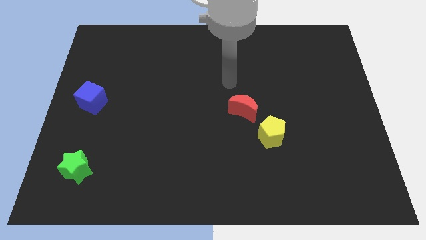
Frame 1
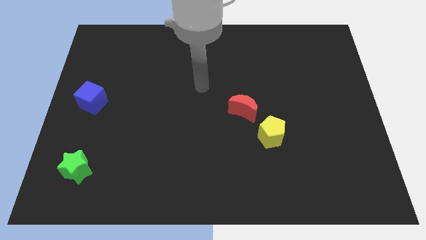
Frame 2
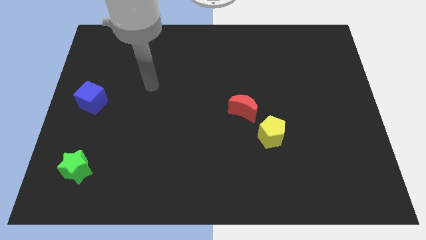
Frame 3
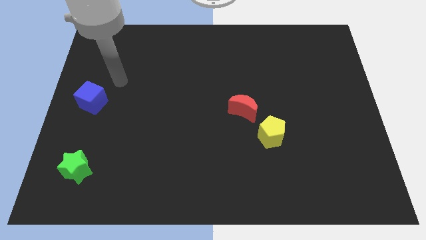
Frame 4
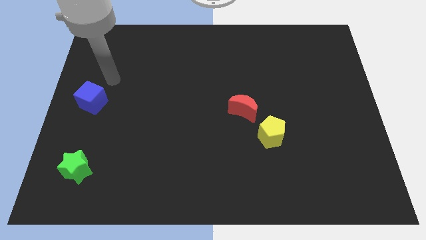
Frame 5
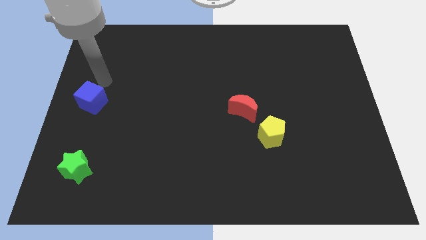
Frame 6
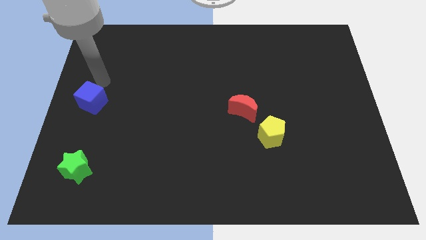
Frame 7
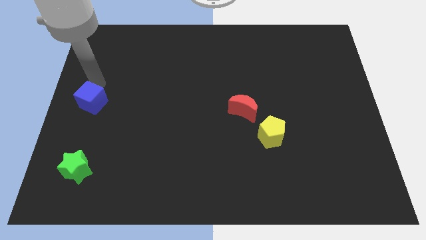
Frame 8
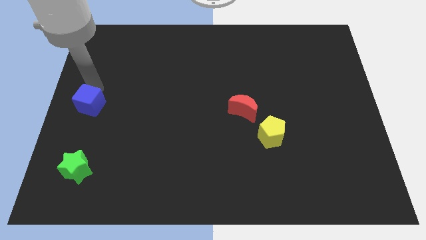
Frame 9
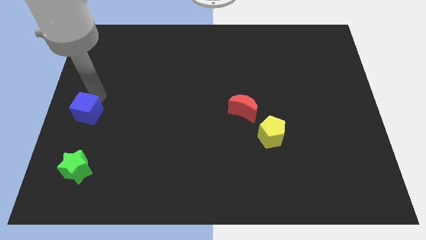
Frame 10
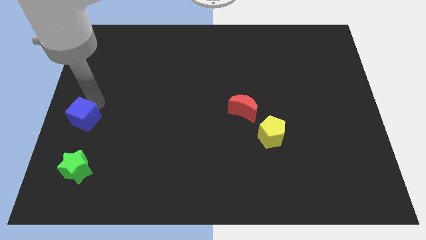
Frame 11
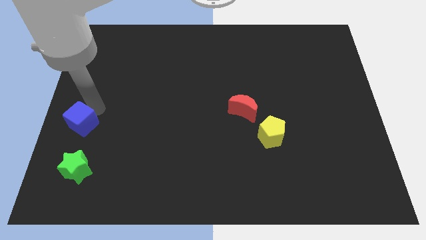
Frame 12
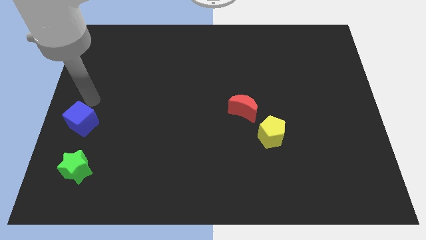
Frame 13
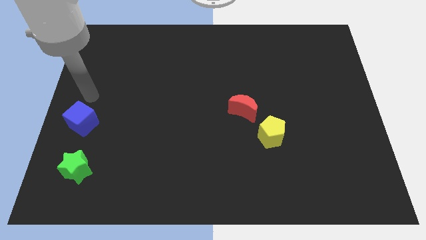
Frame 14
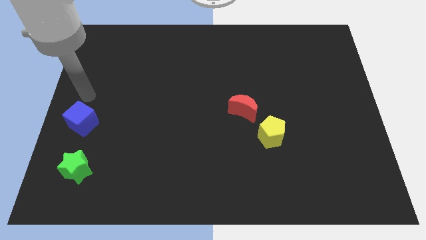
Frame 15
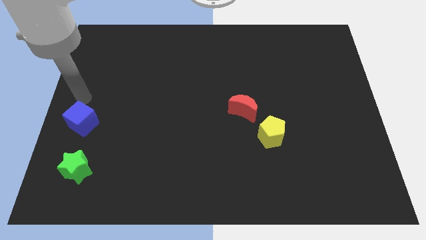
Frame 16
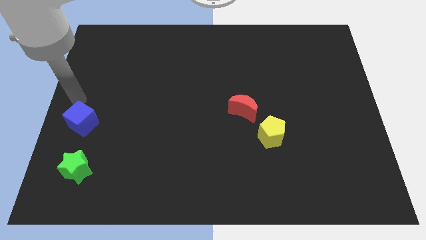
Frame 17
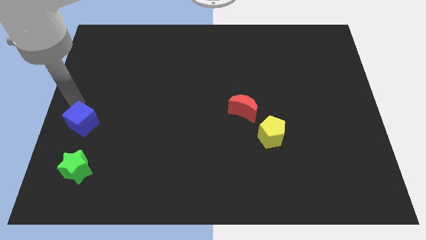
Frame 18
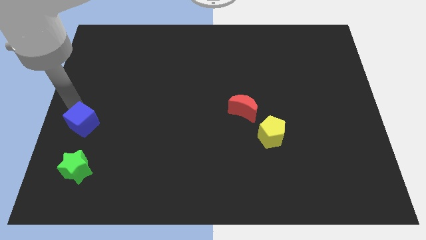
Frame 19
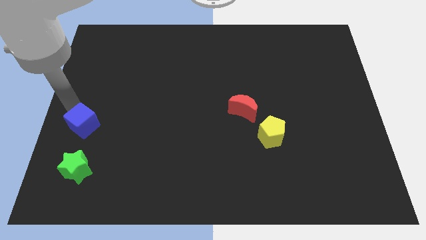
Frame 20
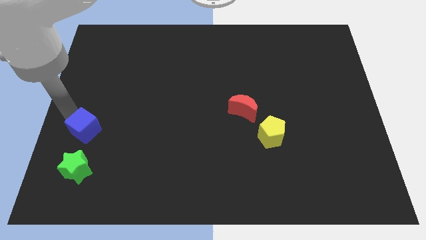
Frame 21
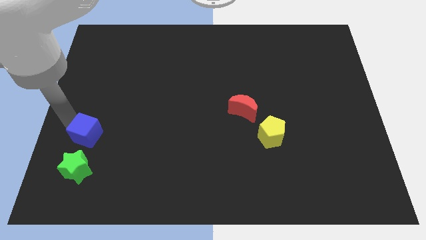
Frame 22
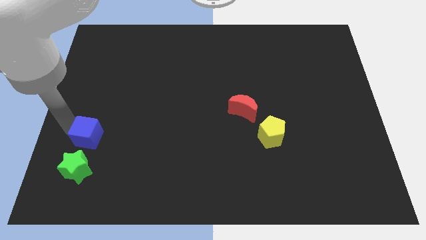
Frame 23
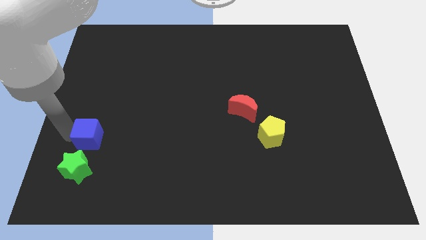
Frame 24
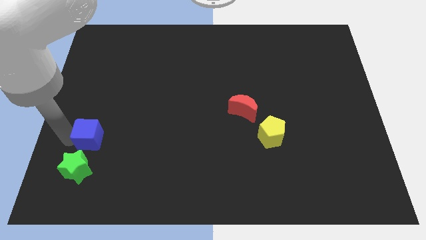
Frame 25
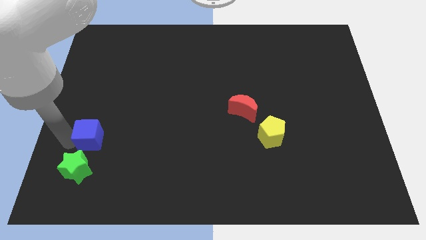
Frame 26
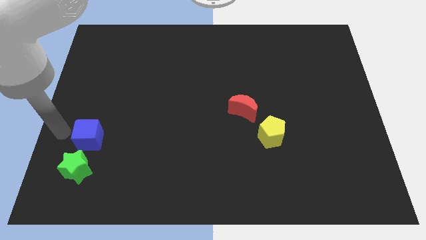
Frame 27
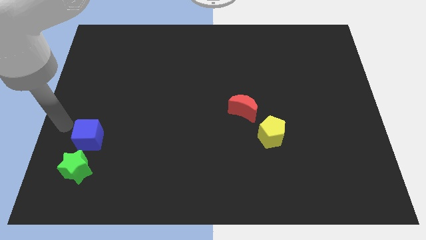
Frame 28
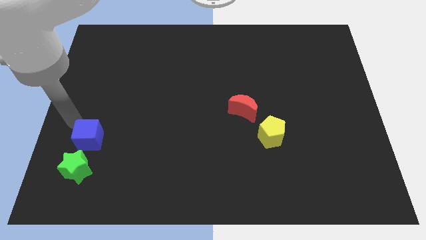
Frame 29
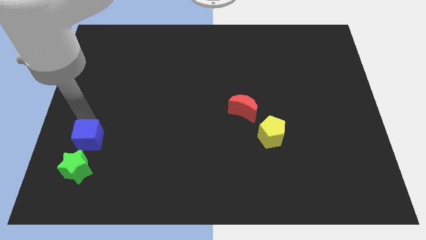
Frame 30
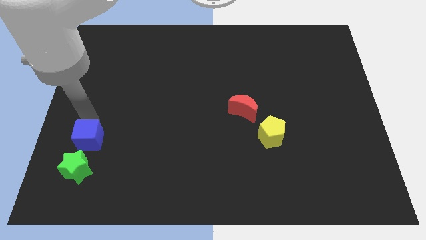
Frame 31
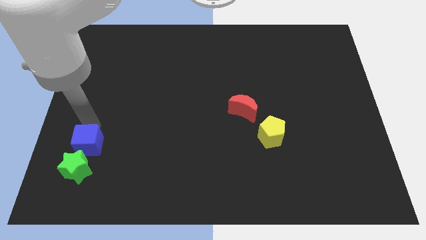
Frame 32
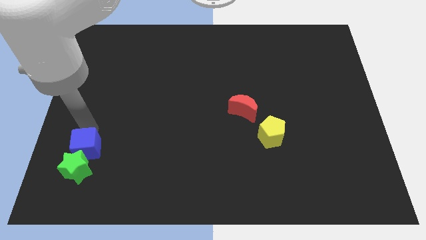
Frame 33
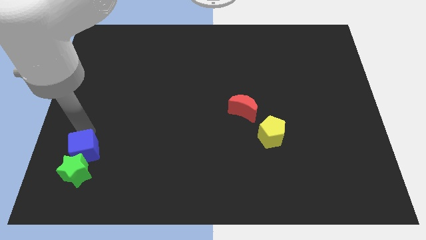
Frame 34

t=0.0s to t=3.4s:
put the blue cube close to the green star

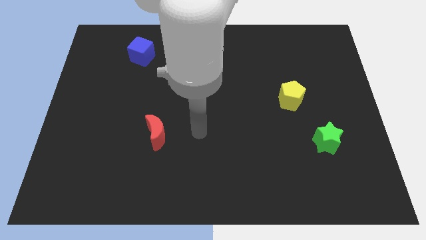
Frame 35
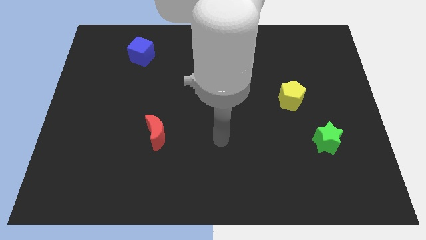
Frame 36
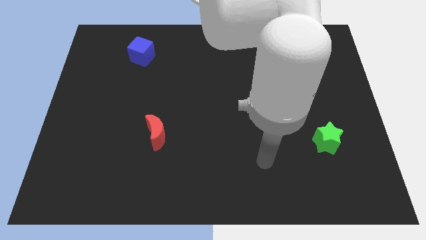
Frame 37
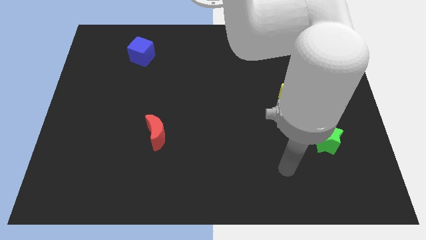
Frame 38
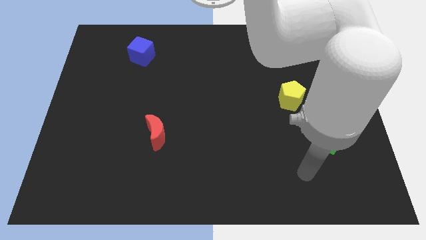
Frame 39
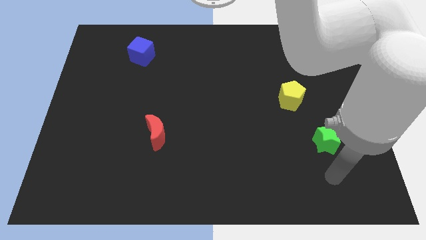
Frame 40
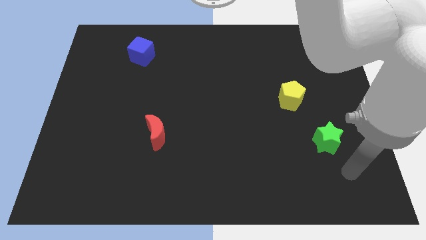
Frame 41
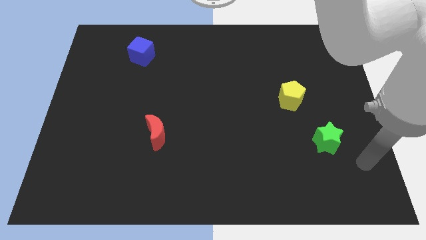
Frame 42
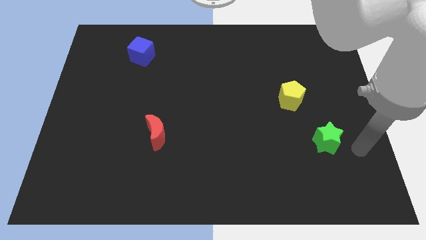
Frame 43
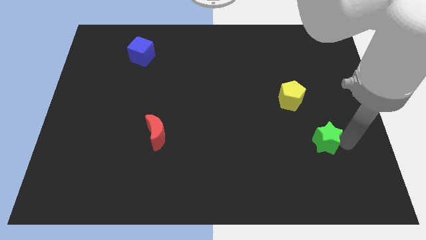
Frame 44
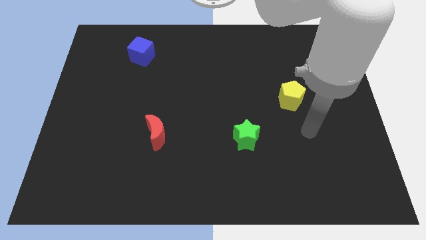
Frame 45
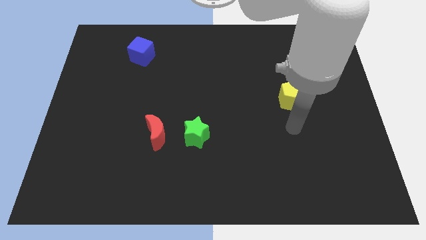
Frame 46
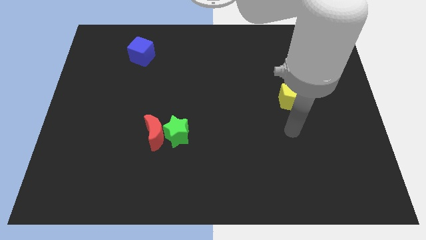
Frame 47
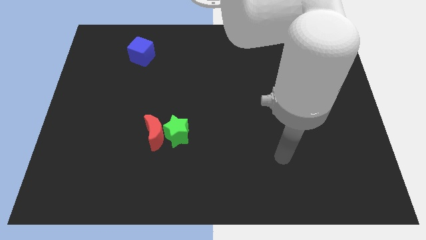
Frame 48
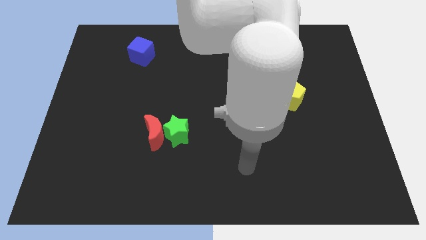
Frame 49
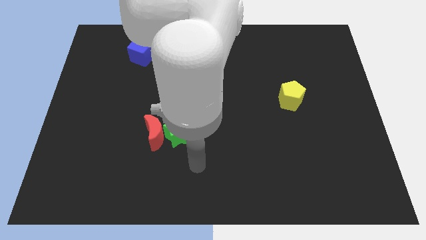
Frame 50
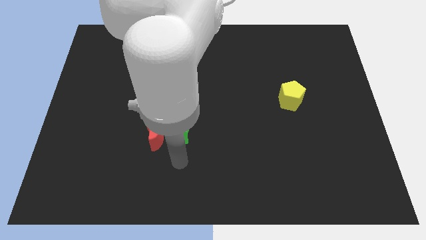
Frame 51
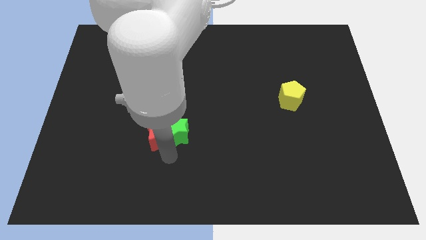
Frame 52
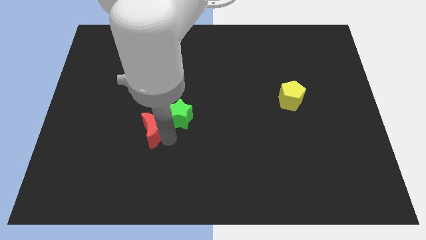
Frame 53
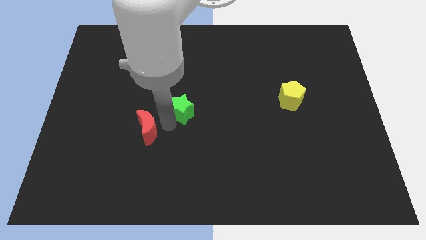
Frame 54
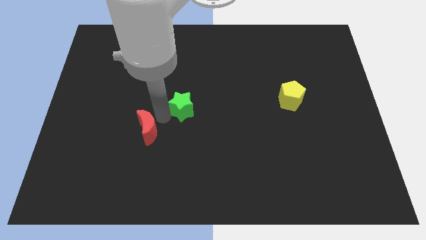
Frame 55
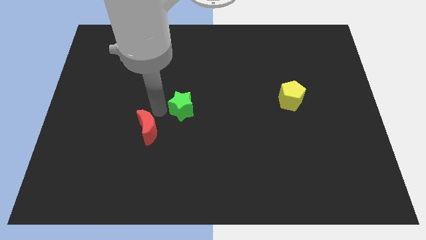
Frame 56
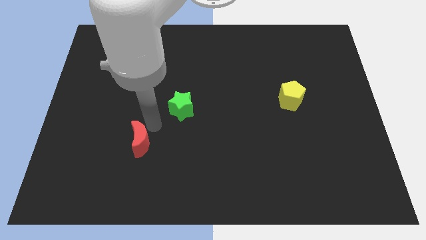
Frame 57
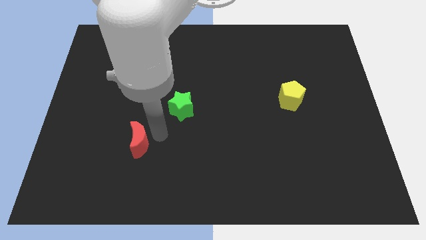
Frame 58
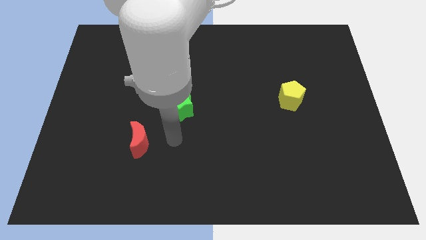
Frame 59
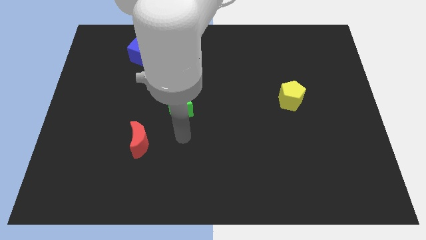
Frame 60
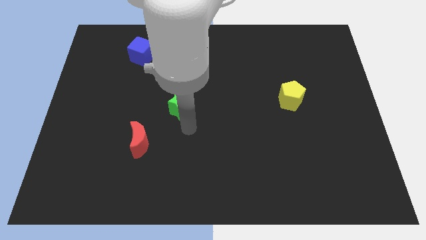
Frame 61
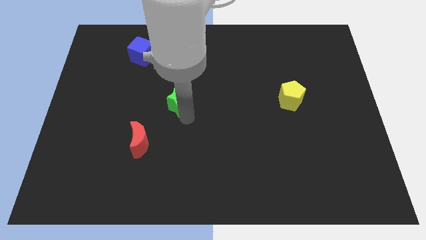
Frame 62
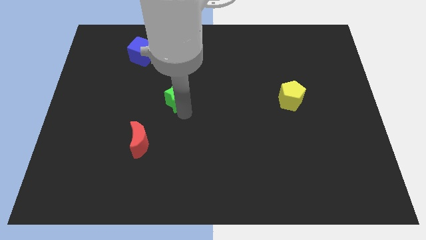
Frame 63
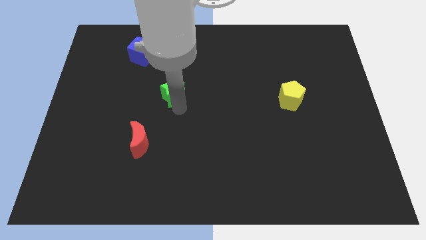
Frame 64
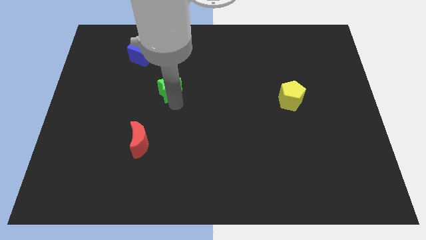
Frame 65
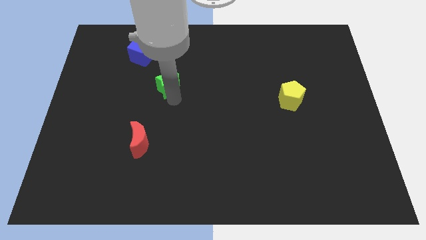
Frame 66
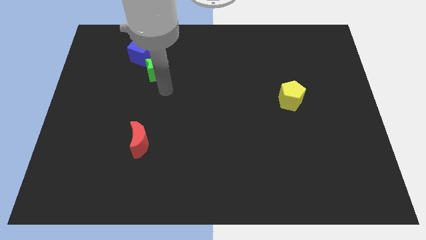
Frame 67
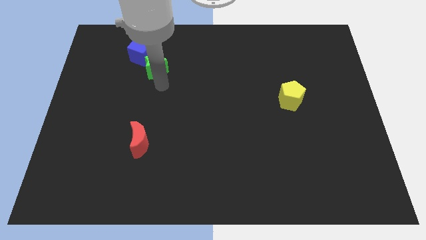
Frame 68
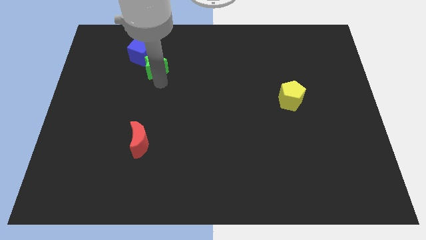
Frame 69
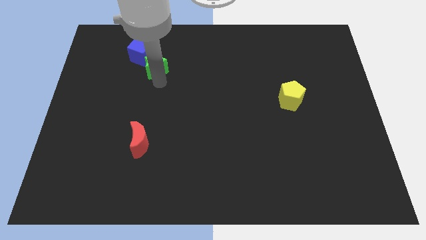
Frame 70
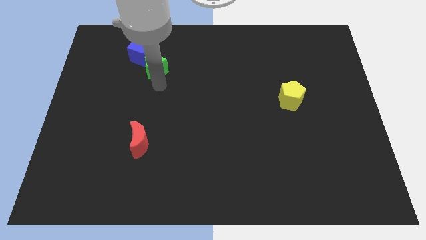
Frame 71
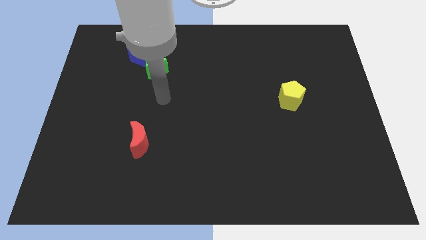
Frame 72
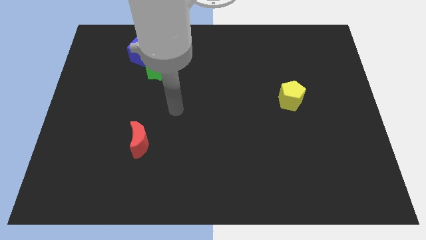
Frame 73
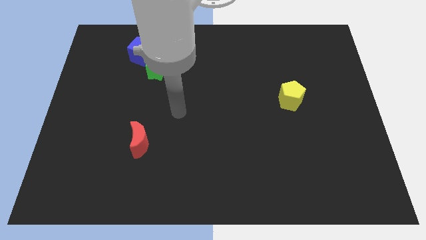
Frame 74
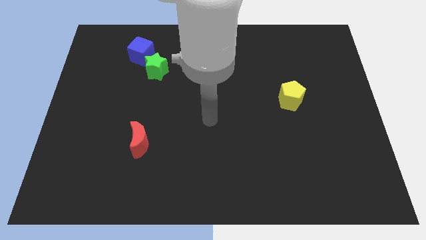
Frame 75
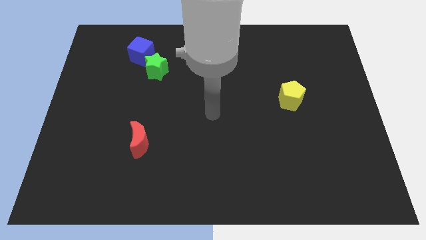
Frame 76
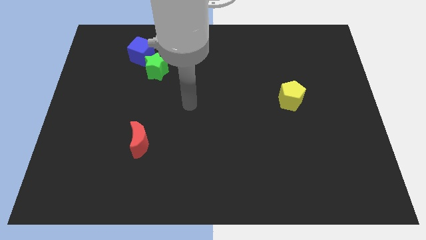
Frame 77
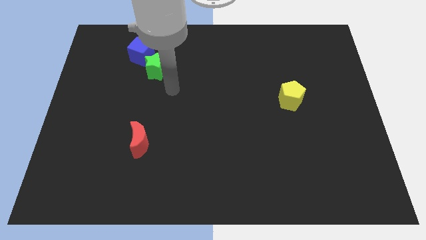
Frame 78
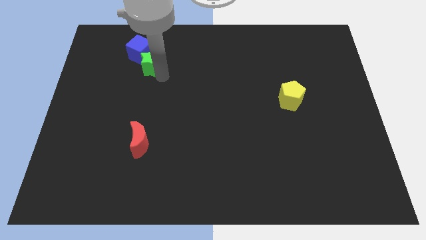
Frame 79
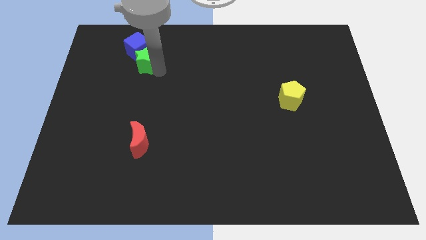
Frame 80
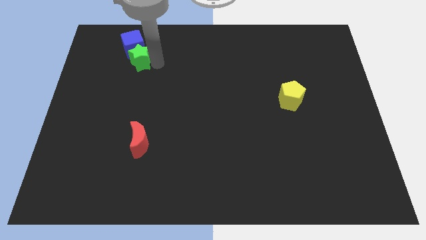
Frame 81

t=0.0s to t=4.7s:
put the green block close to the cube

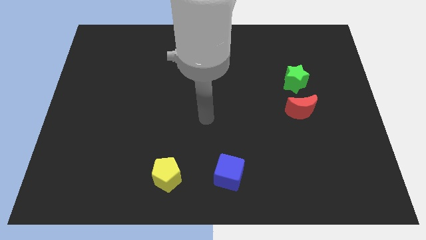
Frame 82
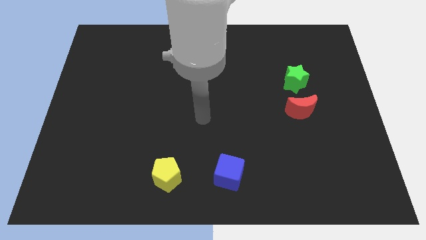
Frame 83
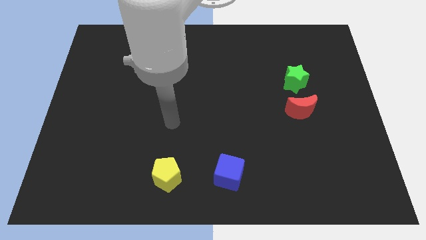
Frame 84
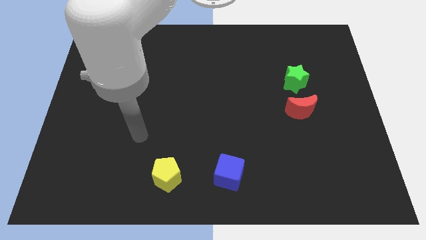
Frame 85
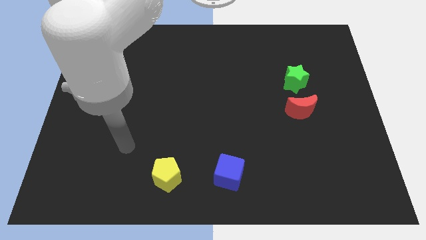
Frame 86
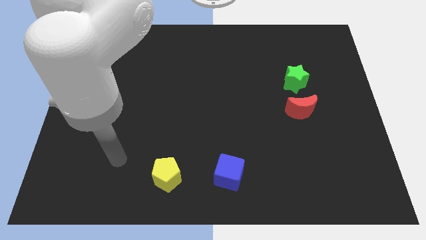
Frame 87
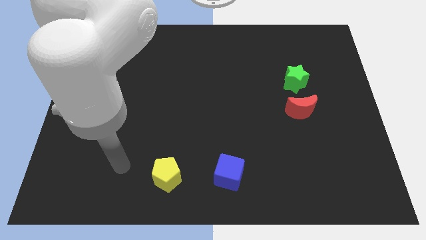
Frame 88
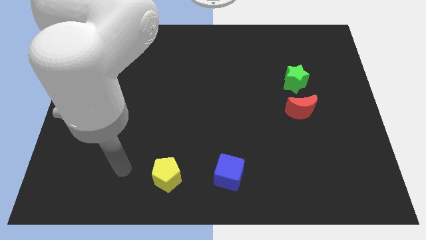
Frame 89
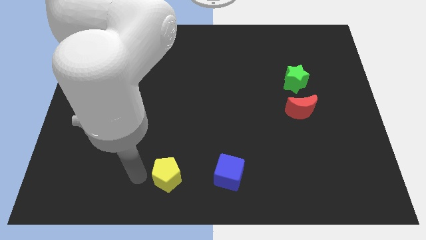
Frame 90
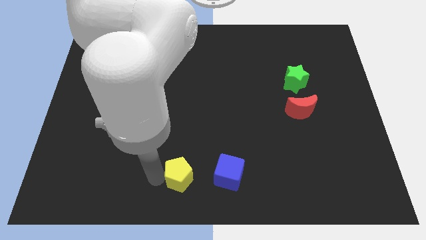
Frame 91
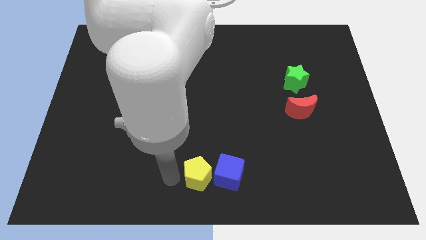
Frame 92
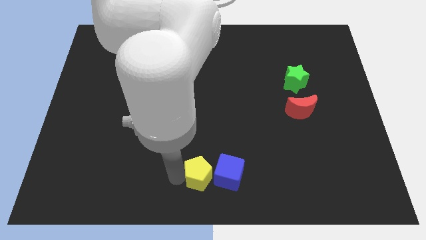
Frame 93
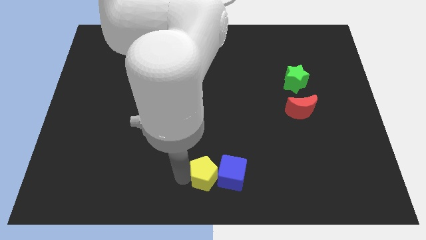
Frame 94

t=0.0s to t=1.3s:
put the pentagon towards the blue block
